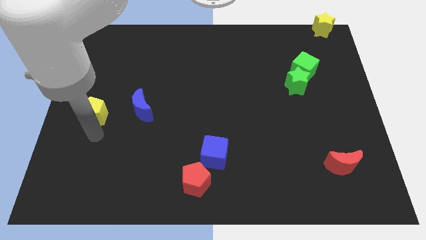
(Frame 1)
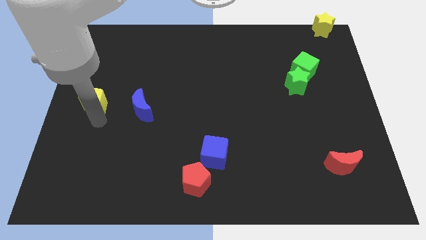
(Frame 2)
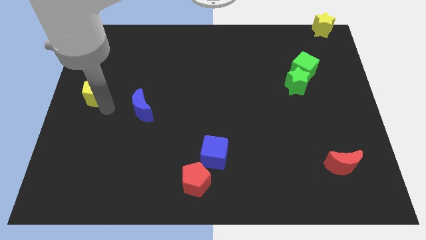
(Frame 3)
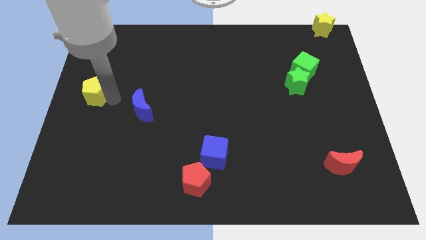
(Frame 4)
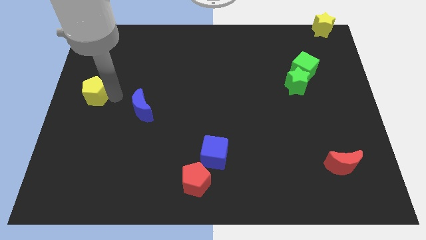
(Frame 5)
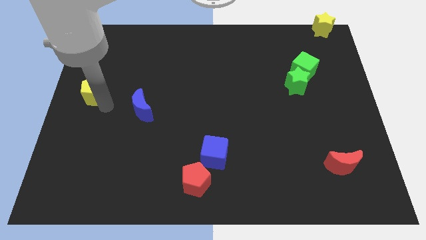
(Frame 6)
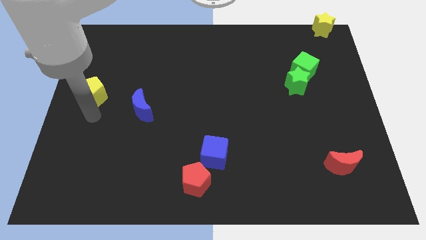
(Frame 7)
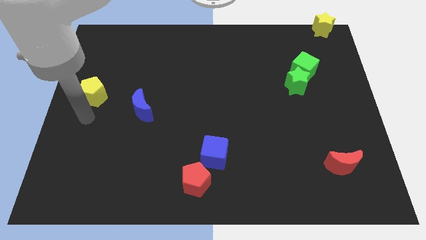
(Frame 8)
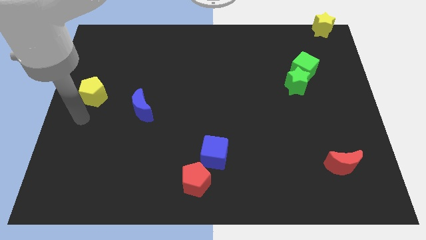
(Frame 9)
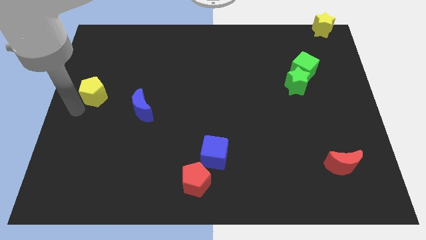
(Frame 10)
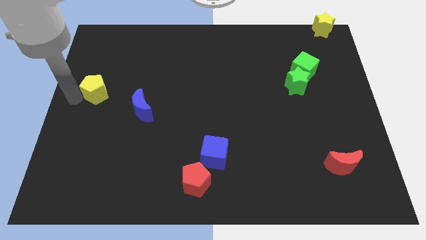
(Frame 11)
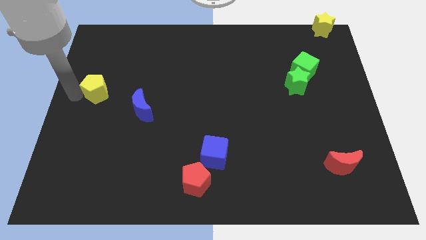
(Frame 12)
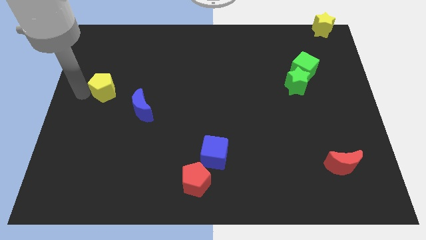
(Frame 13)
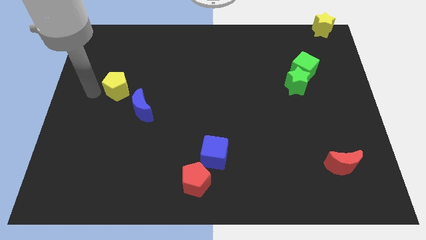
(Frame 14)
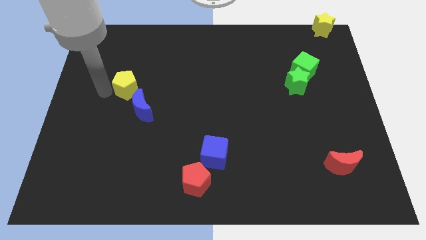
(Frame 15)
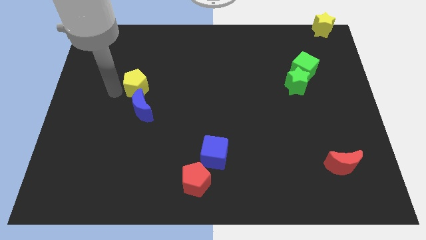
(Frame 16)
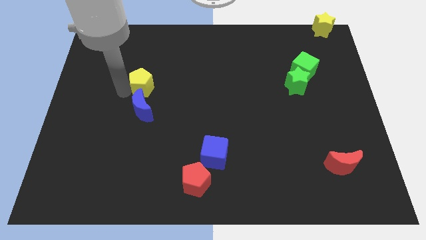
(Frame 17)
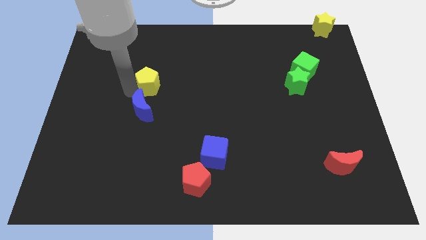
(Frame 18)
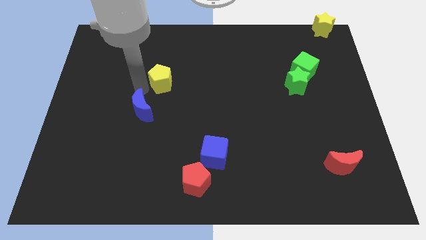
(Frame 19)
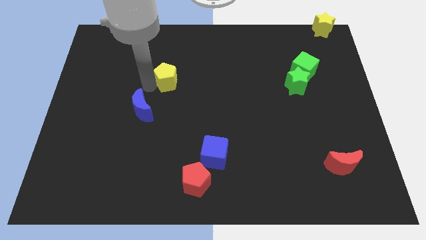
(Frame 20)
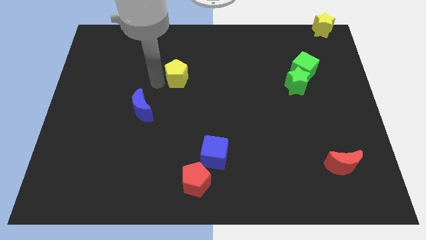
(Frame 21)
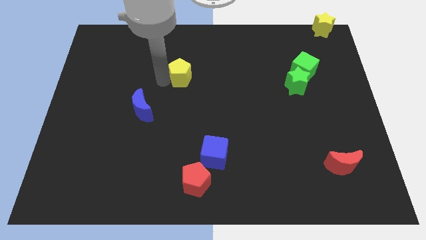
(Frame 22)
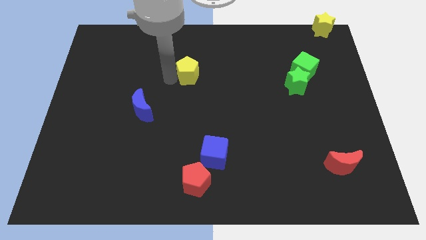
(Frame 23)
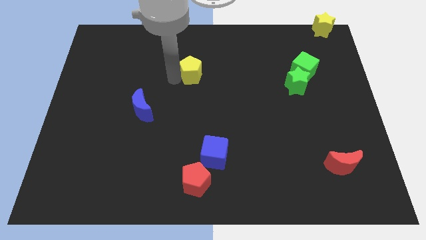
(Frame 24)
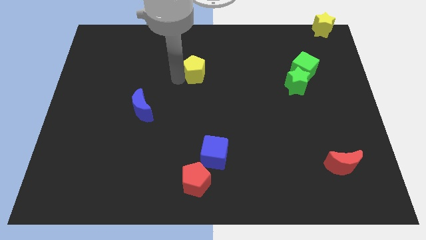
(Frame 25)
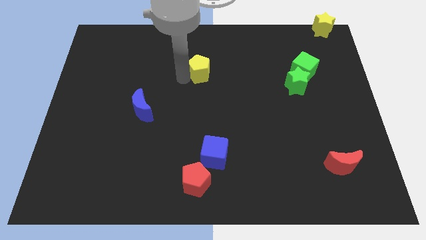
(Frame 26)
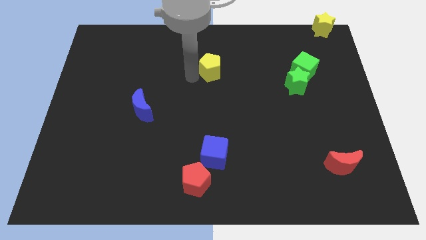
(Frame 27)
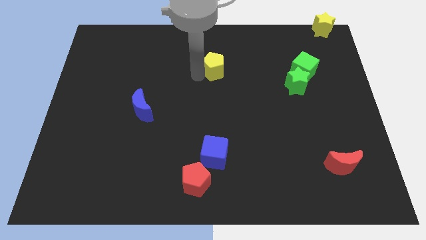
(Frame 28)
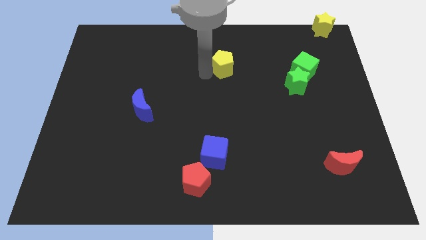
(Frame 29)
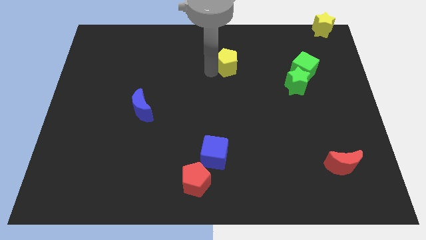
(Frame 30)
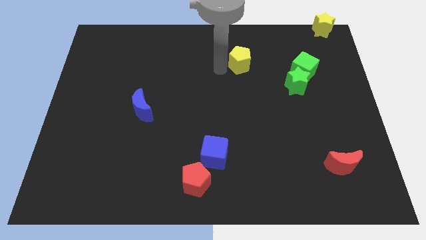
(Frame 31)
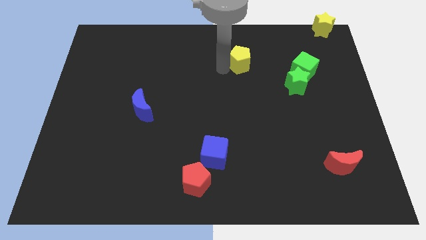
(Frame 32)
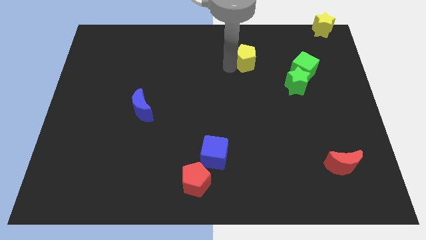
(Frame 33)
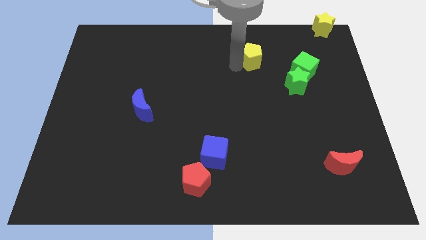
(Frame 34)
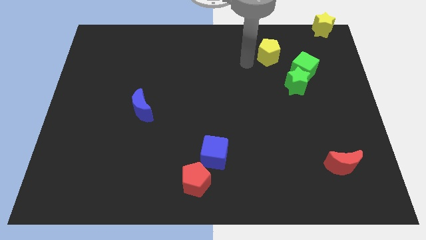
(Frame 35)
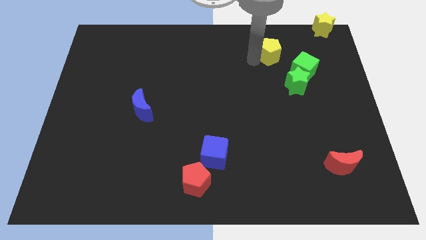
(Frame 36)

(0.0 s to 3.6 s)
slide the yellow pentagon to the left side of the green cube

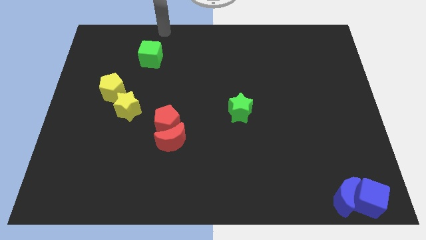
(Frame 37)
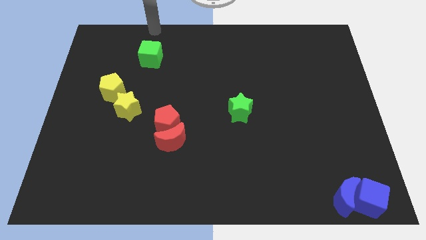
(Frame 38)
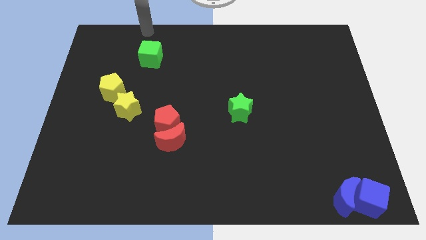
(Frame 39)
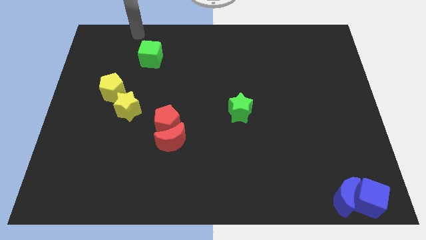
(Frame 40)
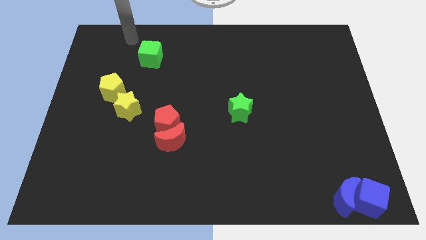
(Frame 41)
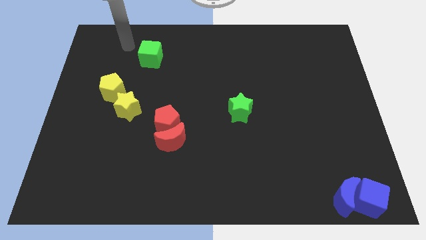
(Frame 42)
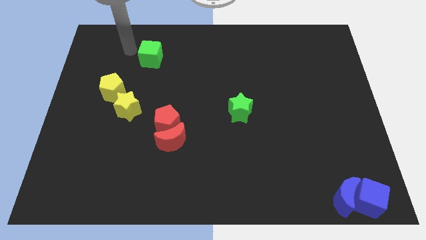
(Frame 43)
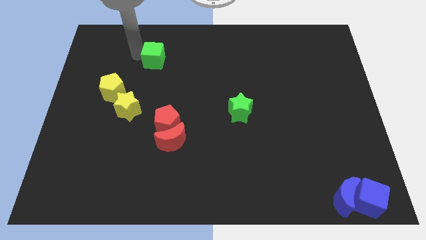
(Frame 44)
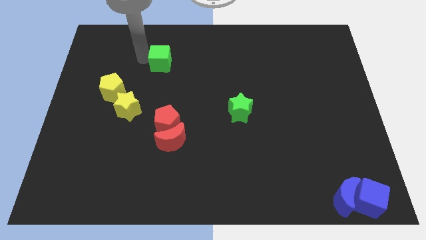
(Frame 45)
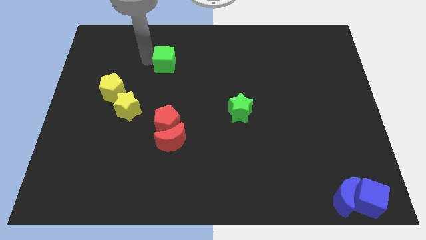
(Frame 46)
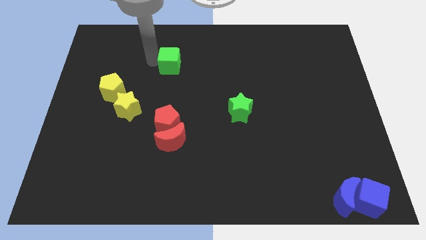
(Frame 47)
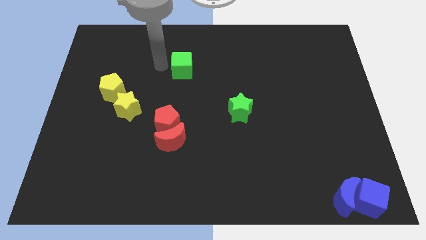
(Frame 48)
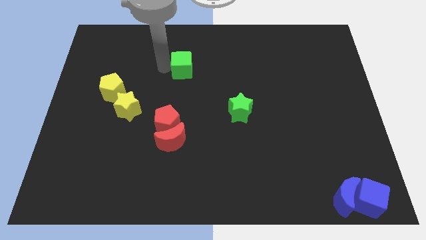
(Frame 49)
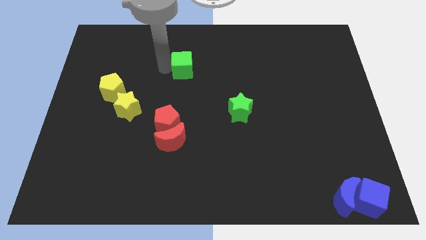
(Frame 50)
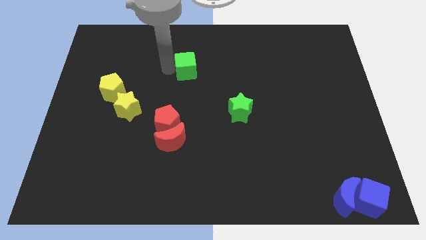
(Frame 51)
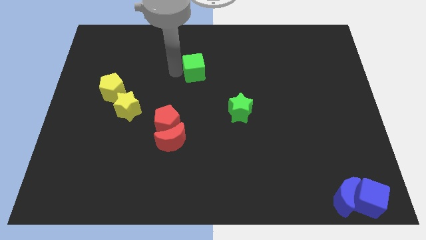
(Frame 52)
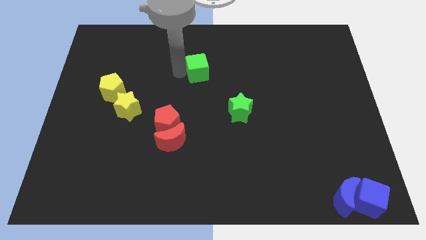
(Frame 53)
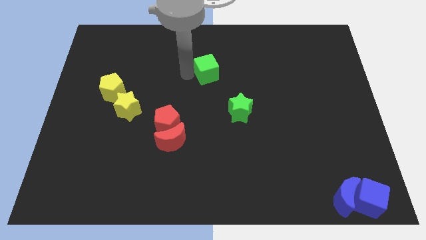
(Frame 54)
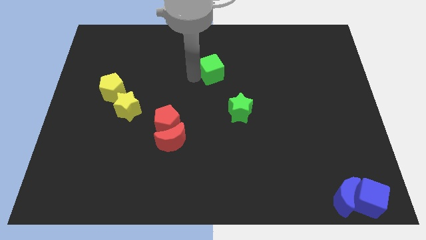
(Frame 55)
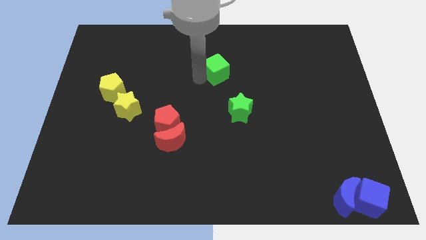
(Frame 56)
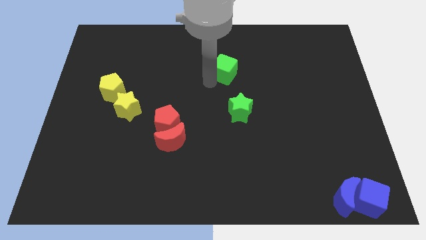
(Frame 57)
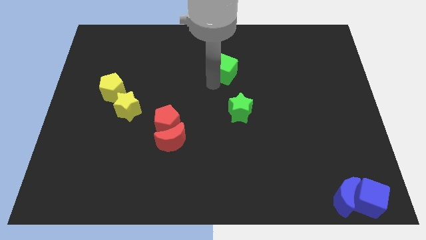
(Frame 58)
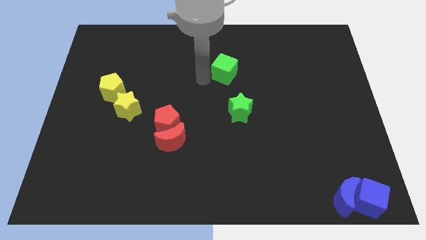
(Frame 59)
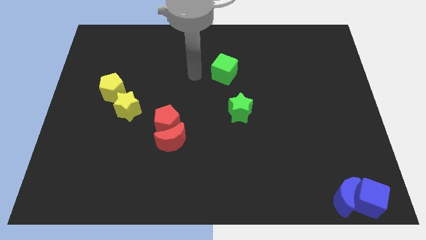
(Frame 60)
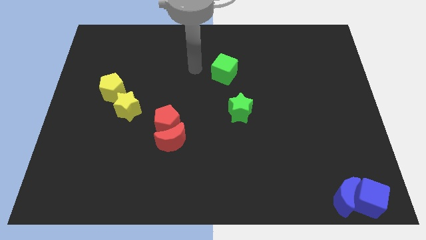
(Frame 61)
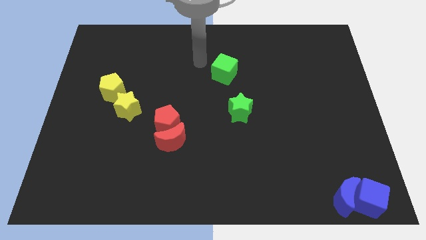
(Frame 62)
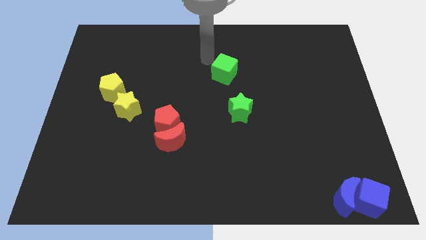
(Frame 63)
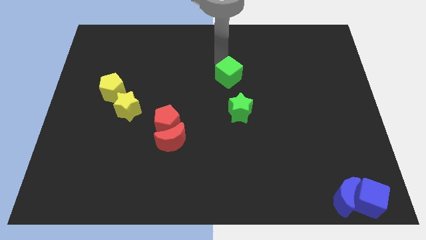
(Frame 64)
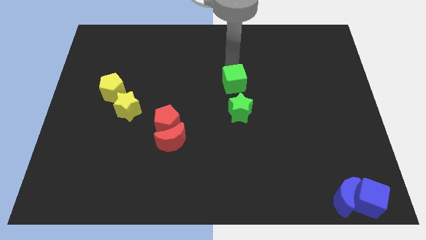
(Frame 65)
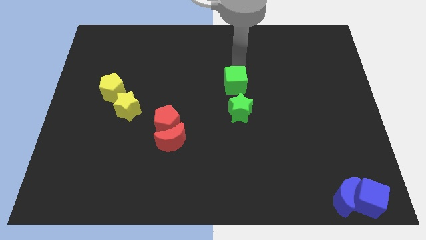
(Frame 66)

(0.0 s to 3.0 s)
place the green cube towards the green star

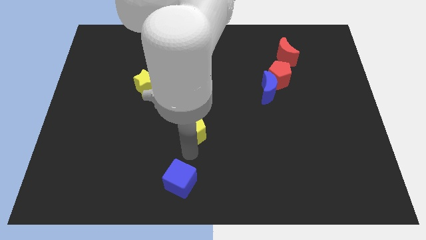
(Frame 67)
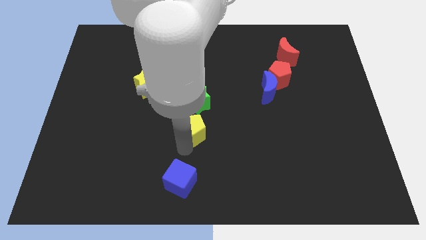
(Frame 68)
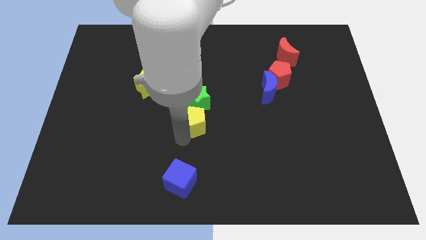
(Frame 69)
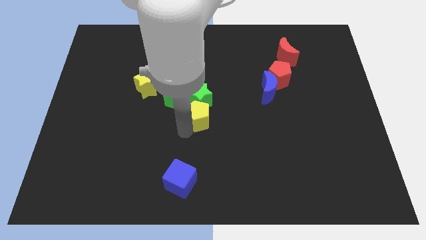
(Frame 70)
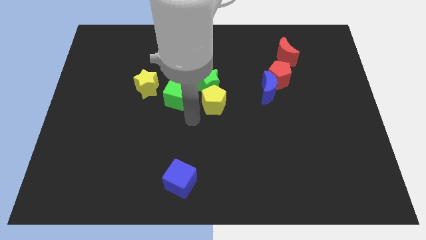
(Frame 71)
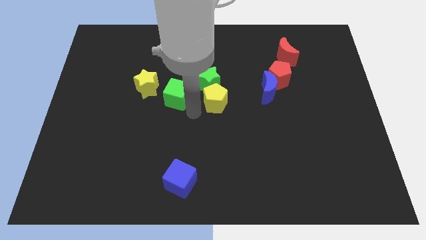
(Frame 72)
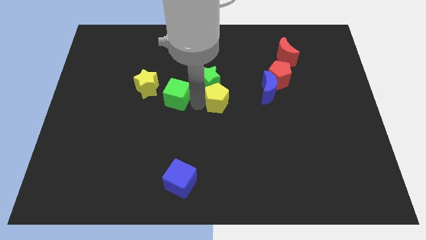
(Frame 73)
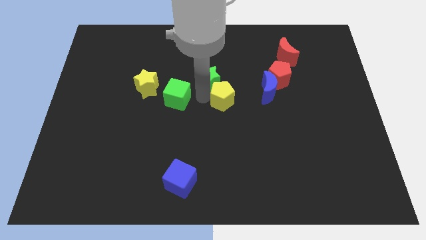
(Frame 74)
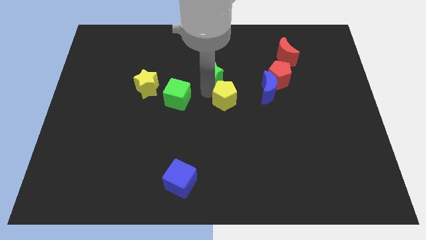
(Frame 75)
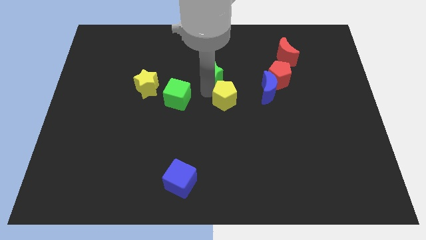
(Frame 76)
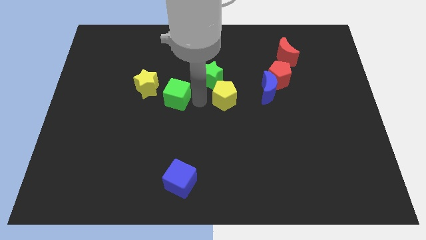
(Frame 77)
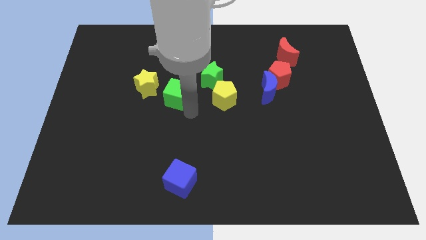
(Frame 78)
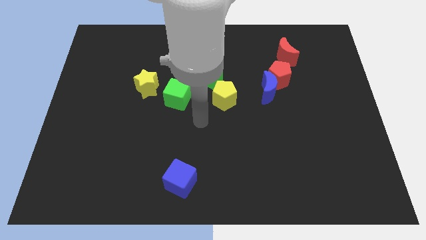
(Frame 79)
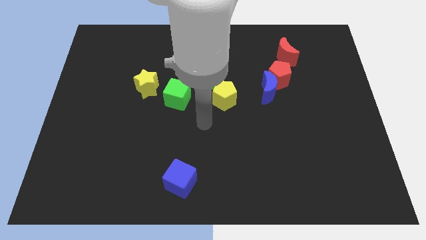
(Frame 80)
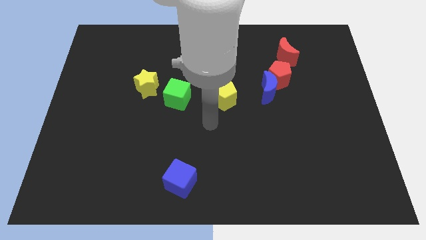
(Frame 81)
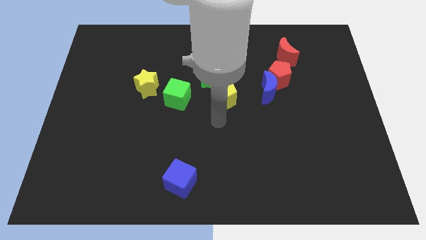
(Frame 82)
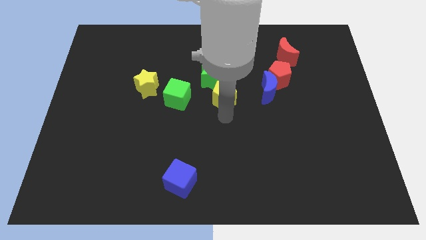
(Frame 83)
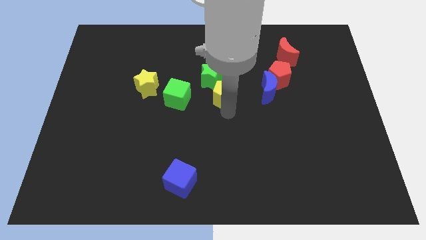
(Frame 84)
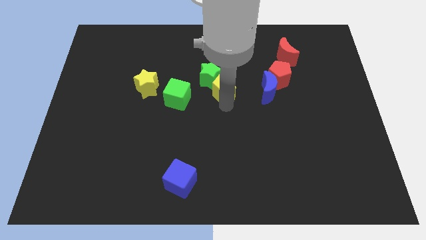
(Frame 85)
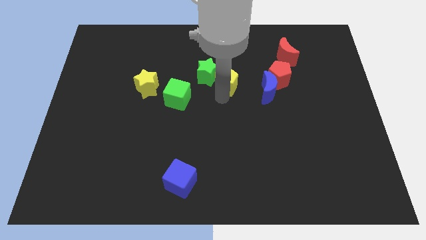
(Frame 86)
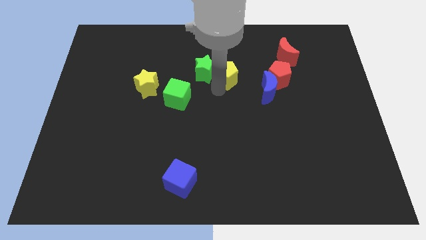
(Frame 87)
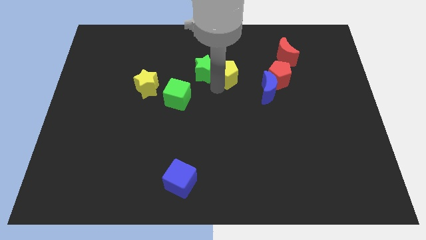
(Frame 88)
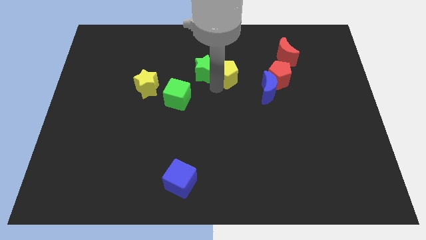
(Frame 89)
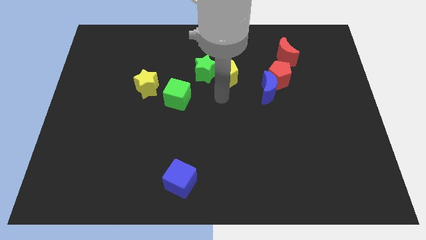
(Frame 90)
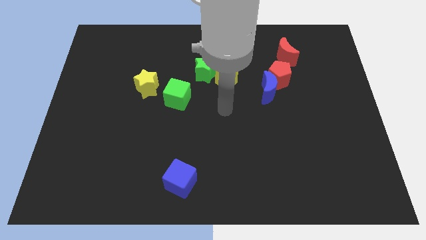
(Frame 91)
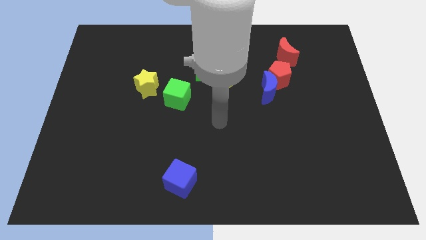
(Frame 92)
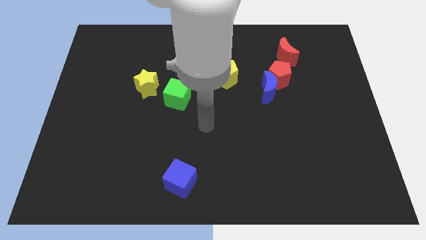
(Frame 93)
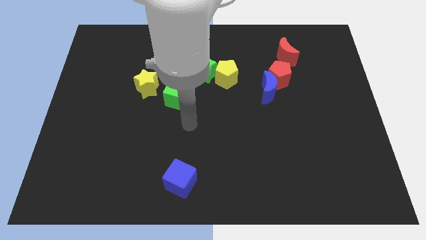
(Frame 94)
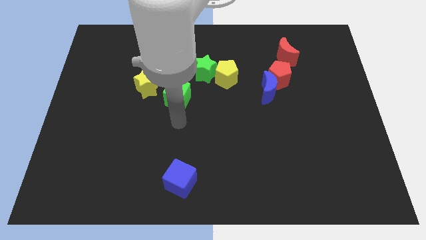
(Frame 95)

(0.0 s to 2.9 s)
move the yellow pentagon to the right of the green star
